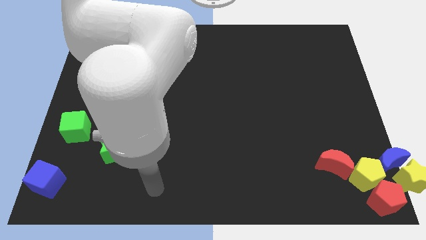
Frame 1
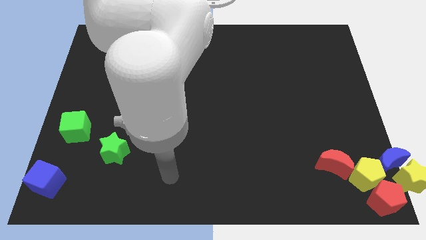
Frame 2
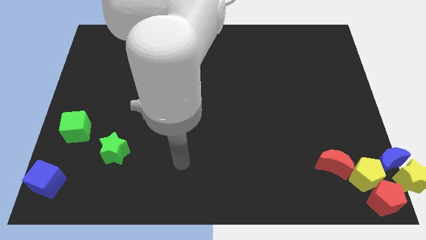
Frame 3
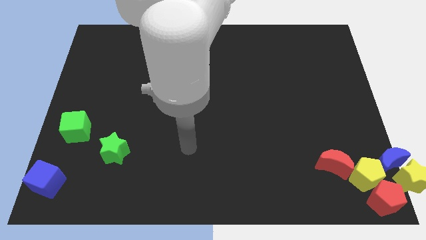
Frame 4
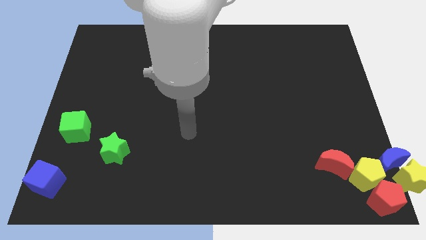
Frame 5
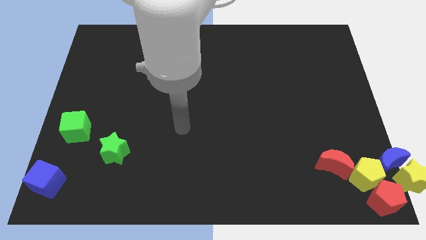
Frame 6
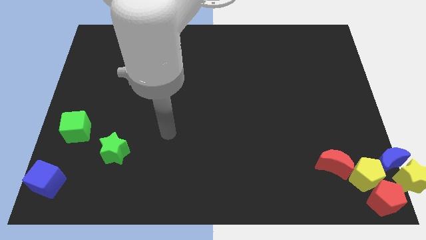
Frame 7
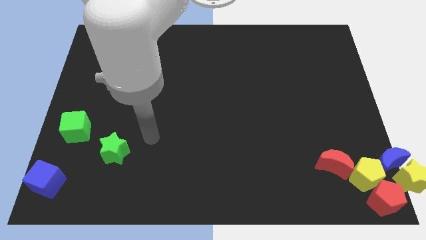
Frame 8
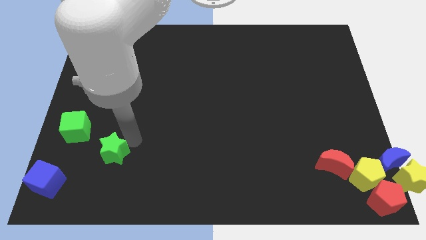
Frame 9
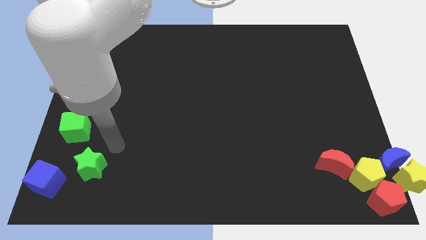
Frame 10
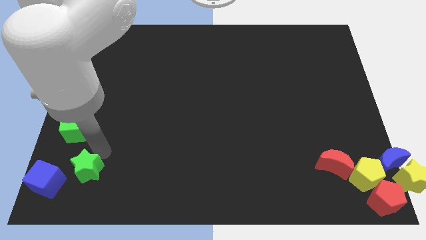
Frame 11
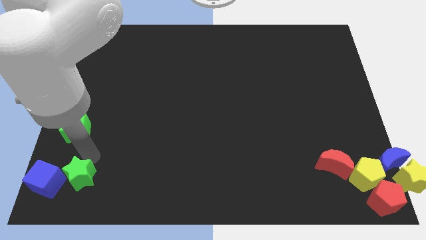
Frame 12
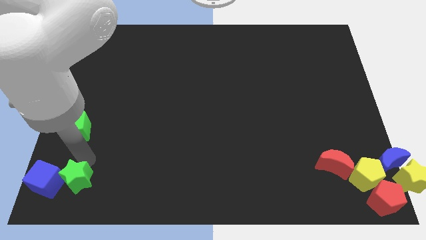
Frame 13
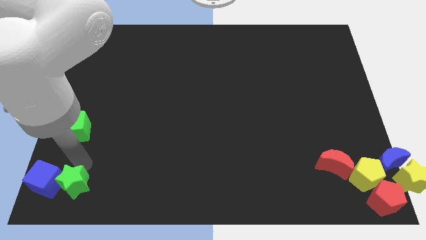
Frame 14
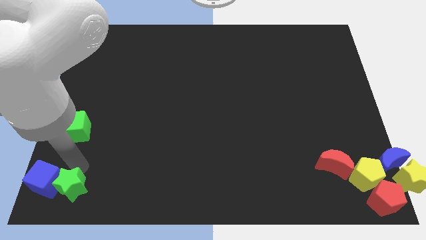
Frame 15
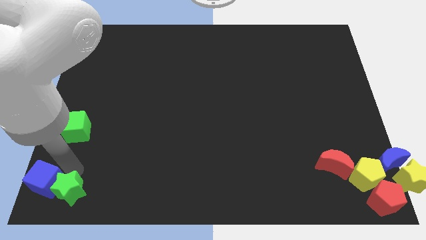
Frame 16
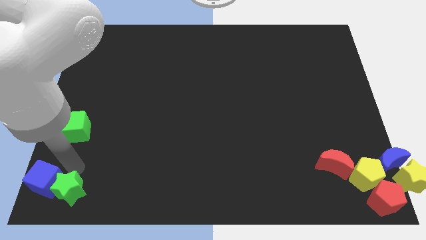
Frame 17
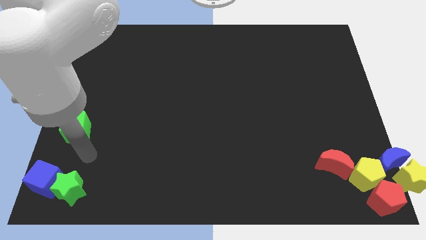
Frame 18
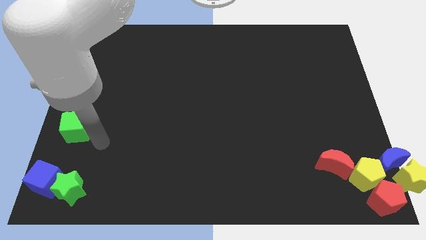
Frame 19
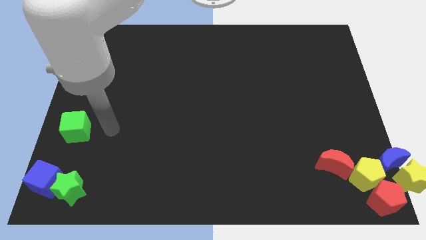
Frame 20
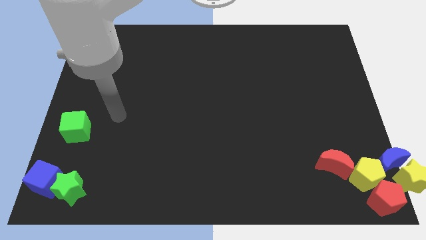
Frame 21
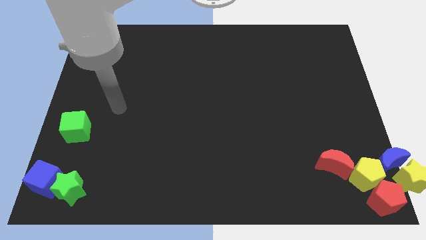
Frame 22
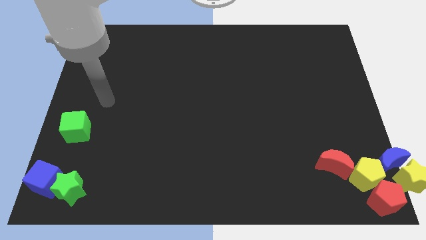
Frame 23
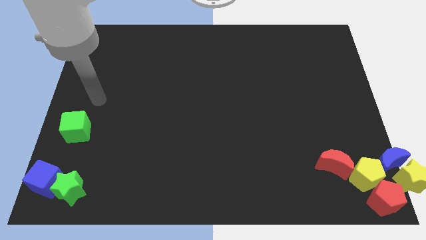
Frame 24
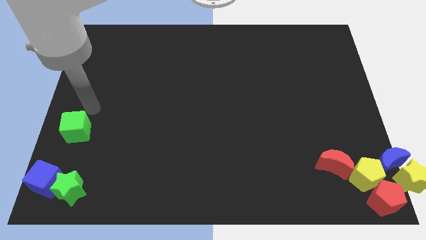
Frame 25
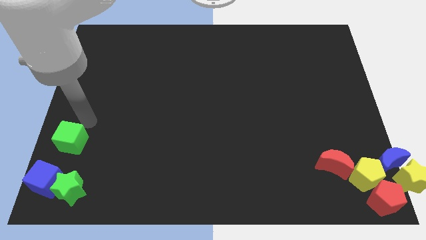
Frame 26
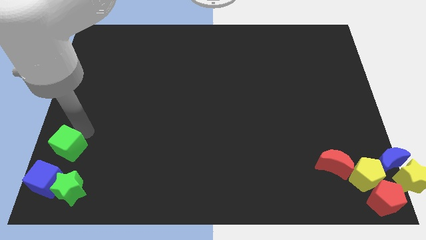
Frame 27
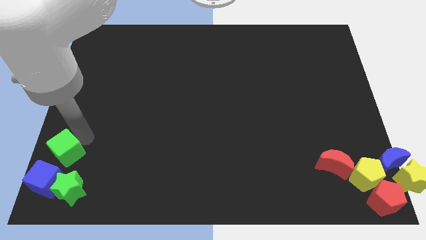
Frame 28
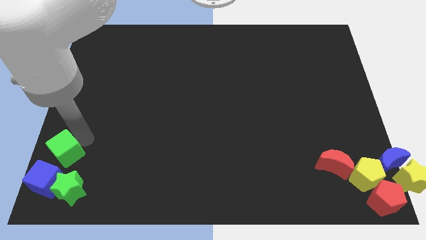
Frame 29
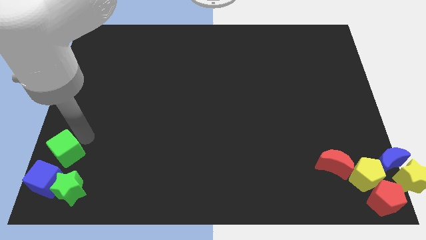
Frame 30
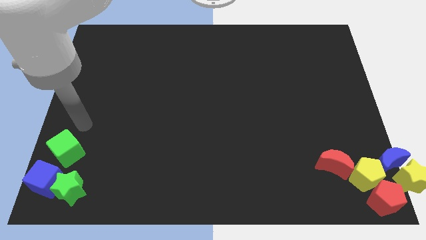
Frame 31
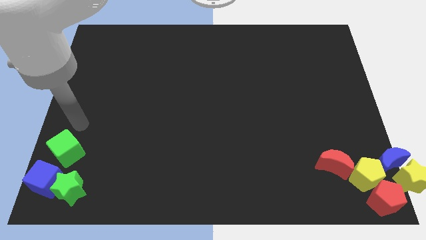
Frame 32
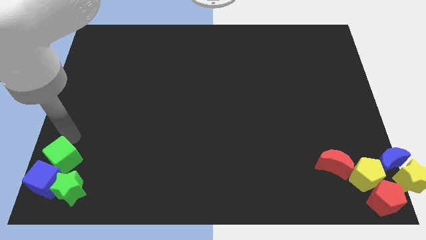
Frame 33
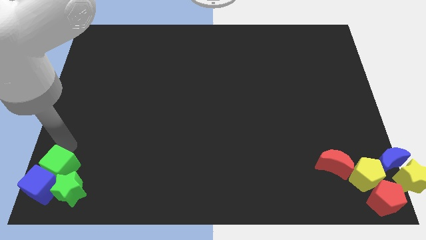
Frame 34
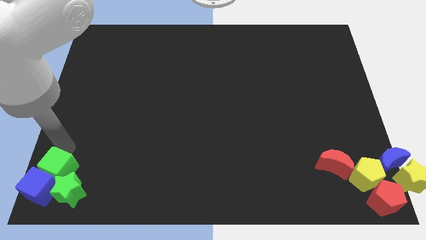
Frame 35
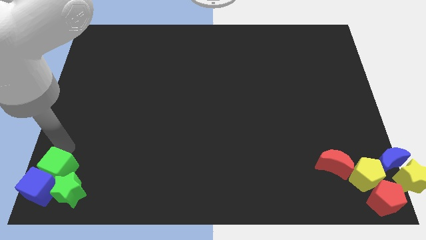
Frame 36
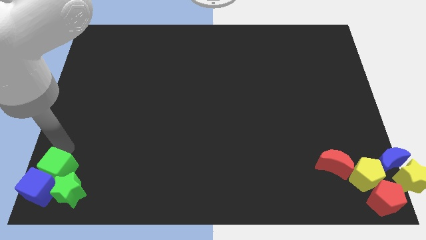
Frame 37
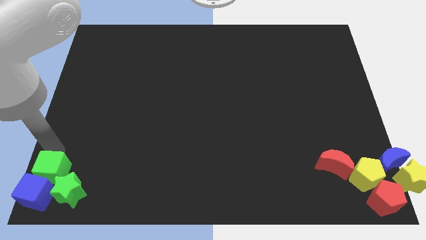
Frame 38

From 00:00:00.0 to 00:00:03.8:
place the green star and the green cube at the bottom left corner

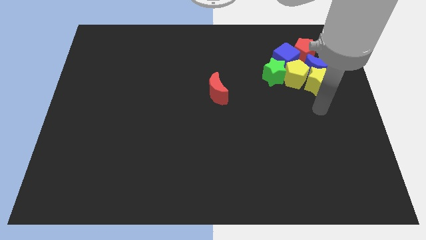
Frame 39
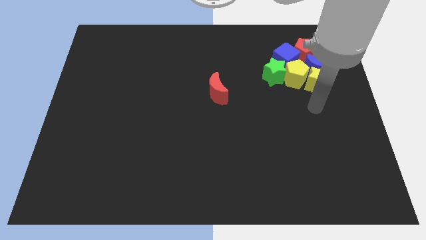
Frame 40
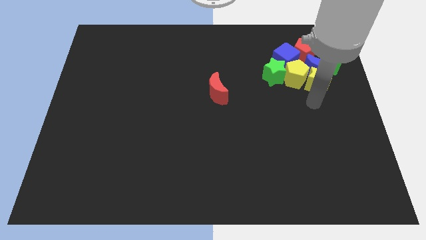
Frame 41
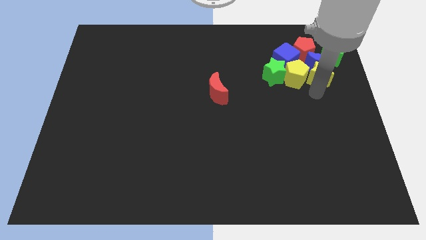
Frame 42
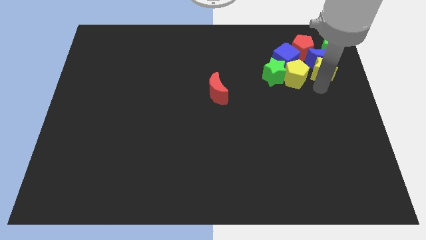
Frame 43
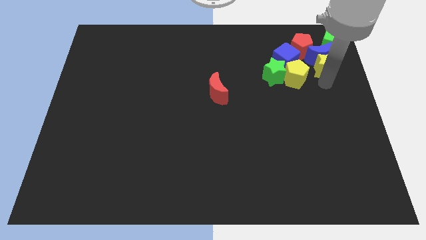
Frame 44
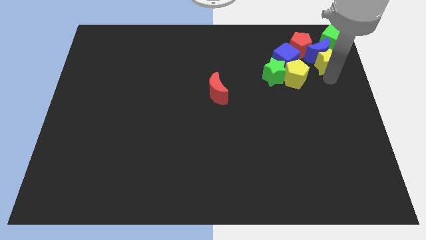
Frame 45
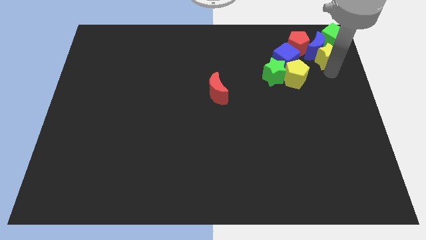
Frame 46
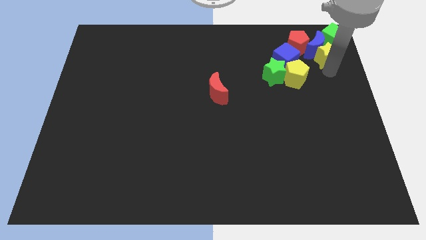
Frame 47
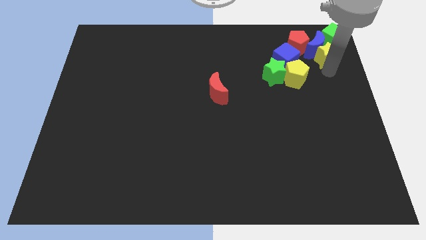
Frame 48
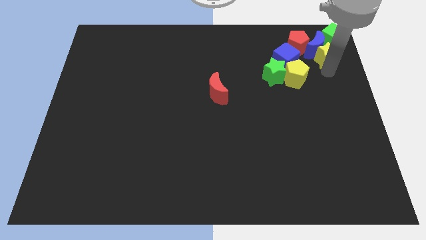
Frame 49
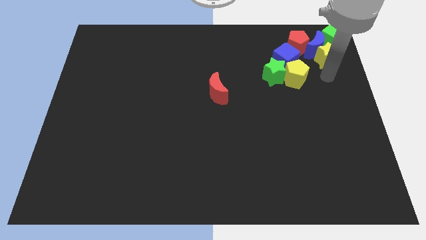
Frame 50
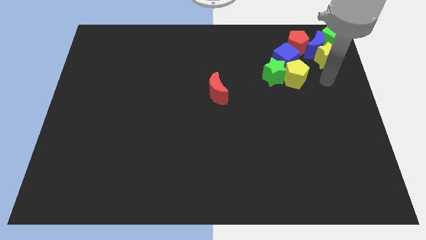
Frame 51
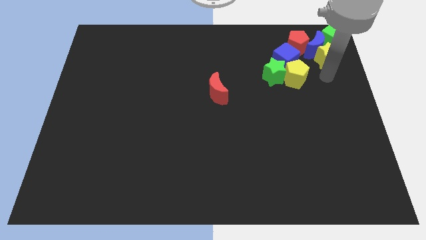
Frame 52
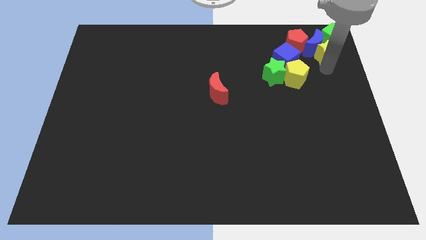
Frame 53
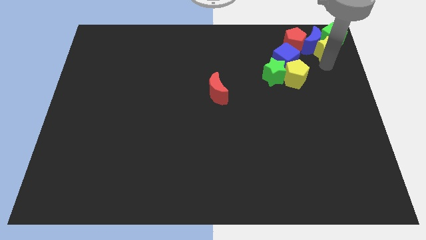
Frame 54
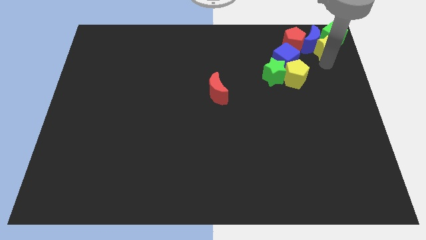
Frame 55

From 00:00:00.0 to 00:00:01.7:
move the green cube to the top right of the board using the yellow star

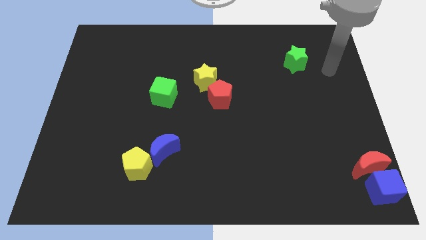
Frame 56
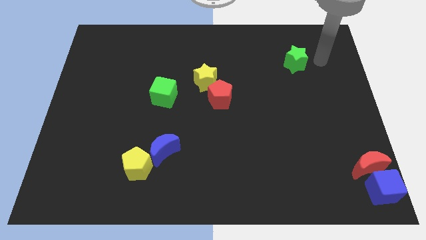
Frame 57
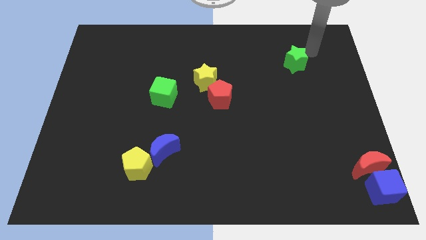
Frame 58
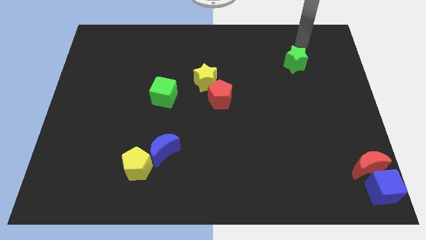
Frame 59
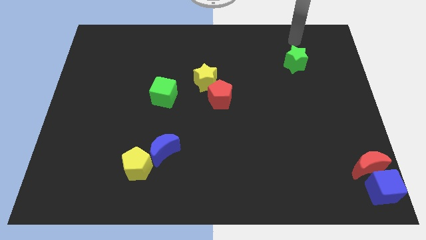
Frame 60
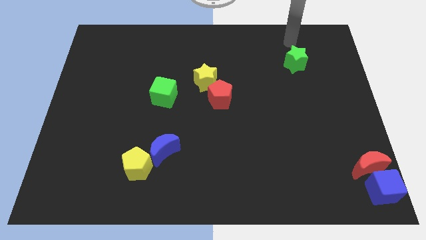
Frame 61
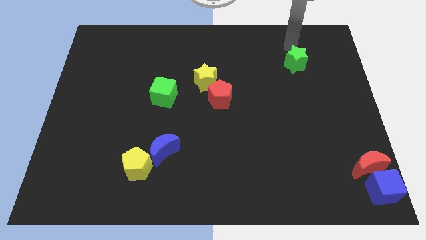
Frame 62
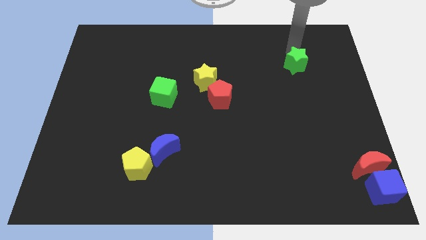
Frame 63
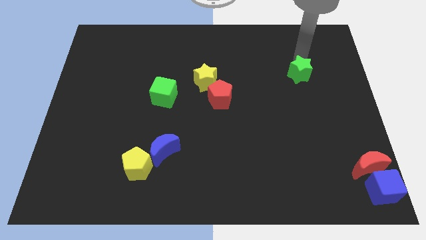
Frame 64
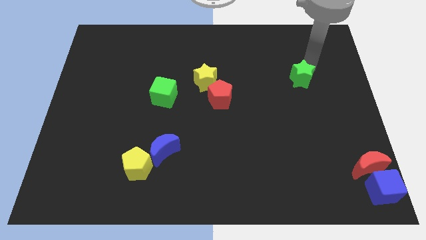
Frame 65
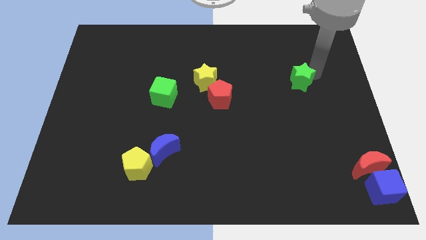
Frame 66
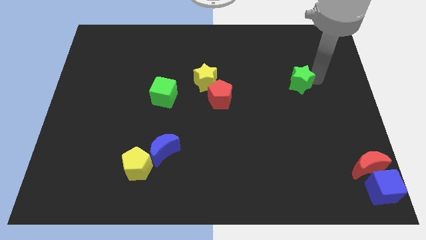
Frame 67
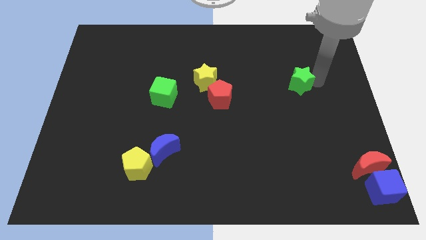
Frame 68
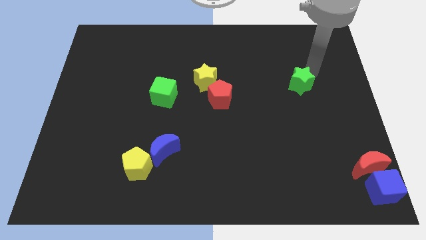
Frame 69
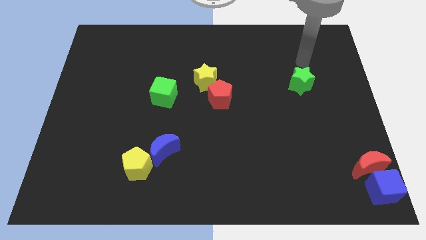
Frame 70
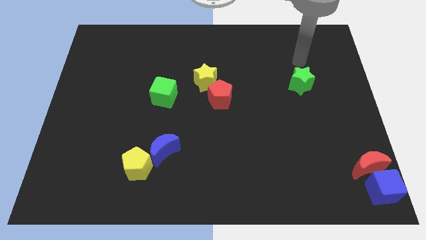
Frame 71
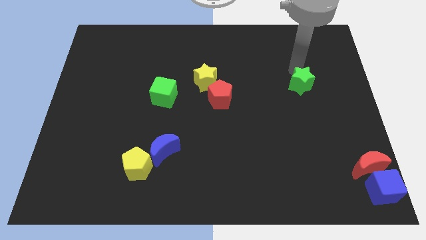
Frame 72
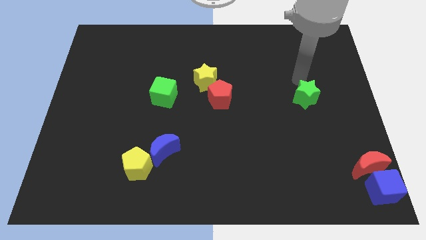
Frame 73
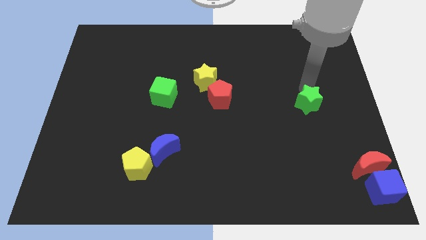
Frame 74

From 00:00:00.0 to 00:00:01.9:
push the green star to the right of the red pentagon

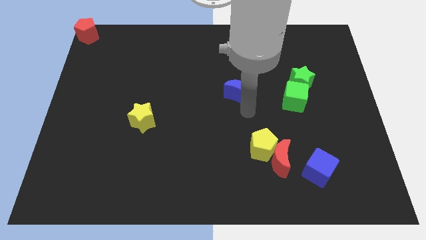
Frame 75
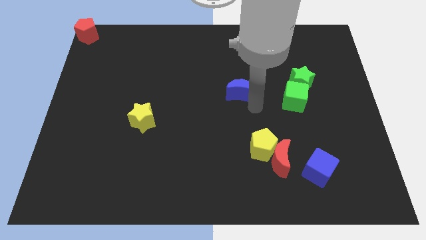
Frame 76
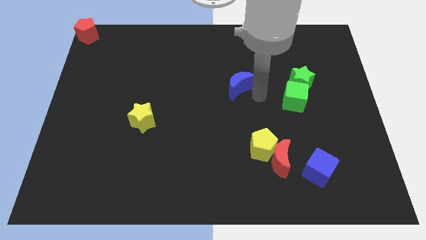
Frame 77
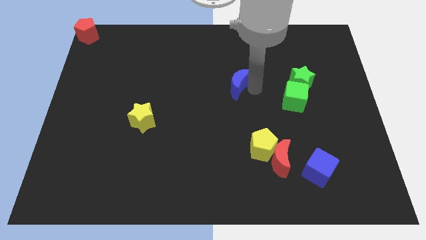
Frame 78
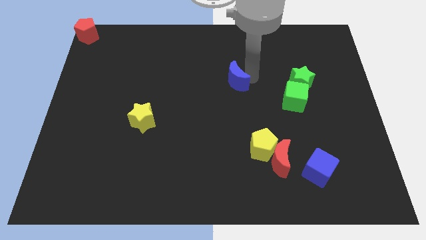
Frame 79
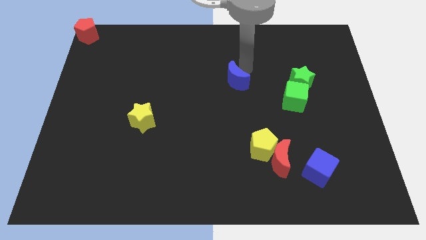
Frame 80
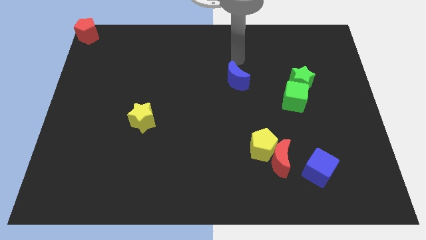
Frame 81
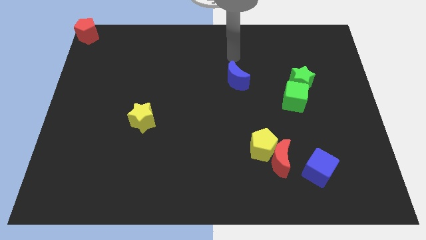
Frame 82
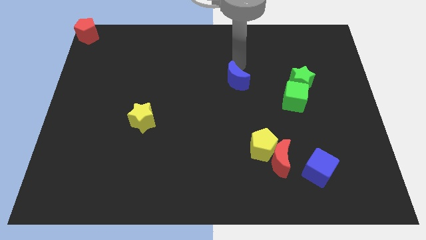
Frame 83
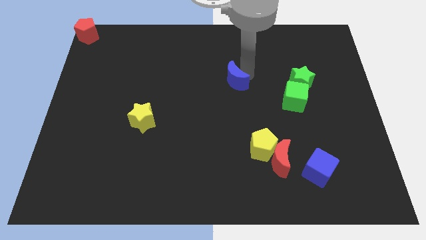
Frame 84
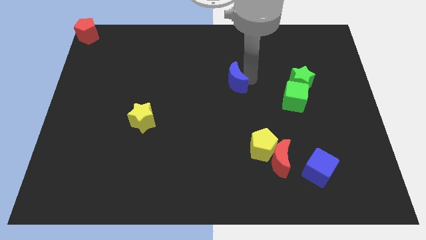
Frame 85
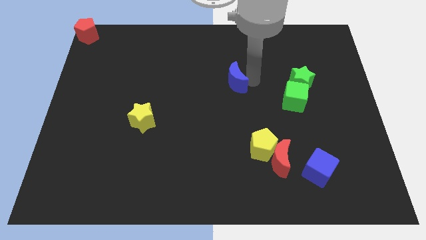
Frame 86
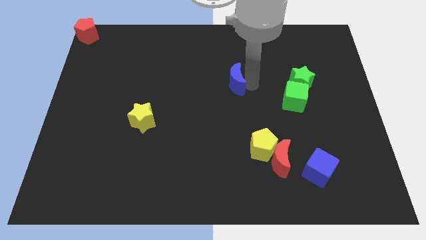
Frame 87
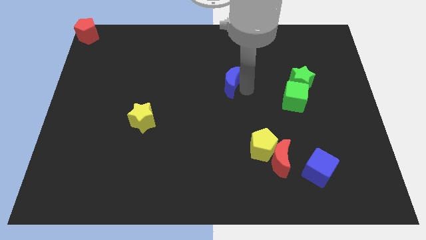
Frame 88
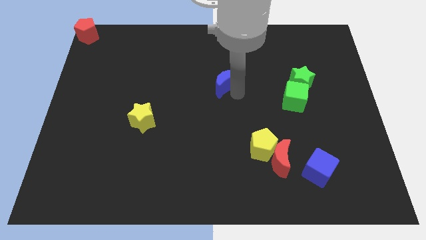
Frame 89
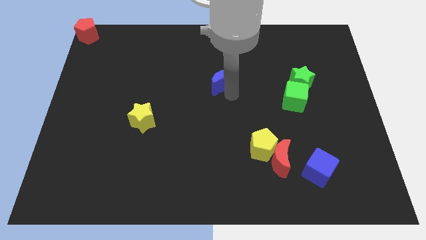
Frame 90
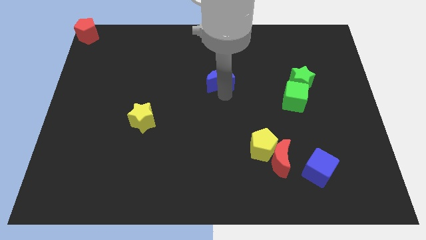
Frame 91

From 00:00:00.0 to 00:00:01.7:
move the blue moon to the center of the board

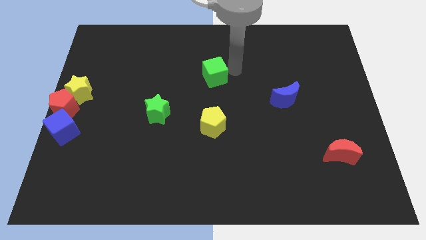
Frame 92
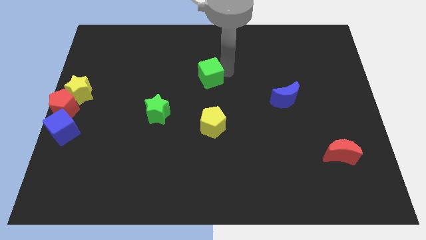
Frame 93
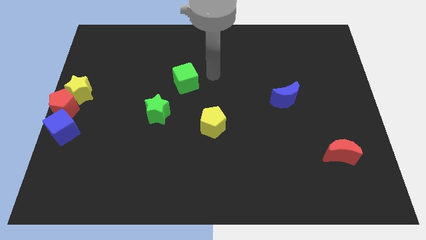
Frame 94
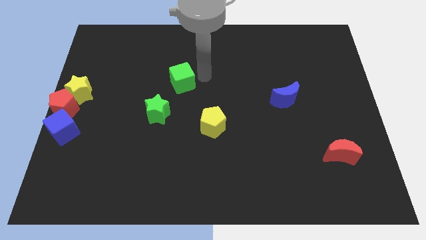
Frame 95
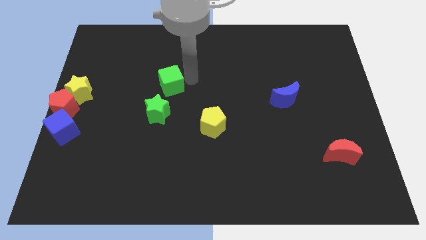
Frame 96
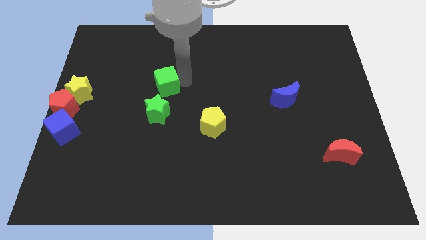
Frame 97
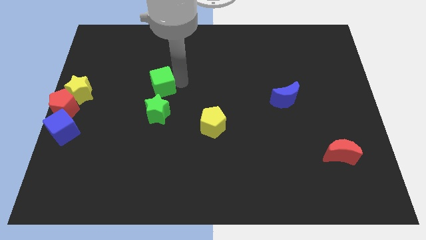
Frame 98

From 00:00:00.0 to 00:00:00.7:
place the green cube above the green star
